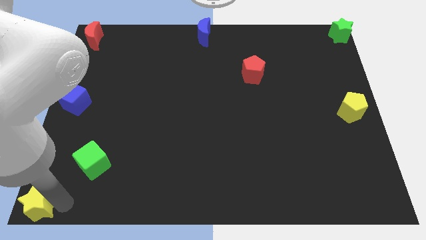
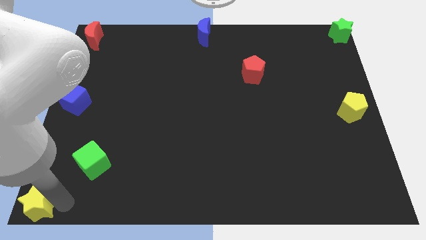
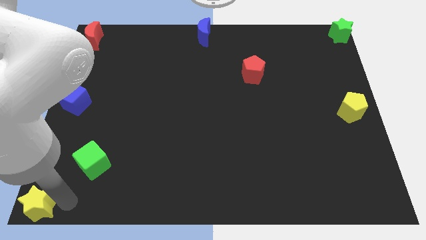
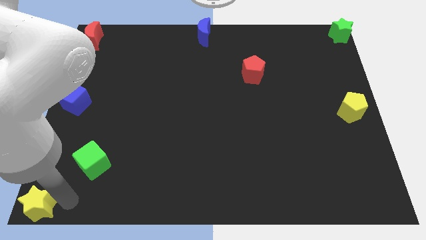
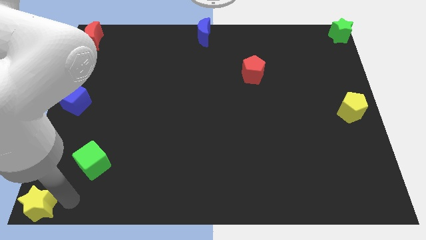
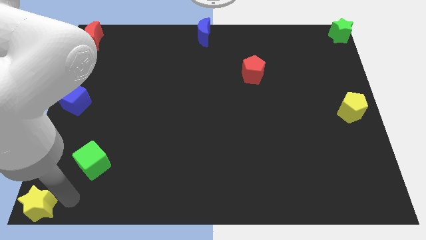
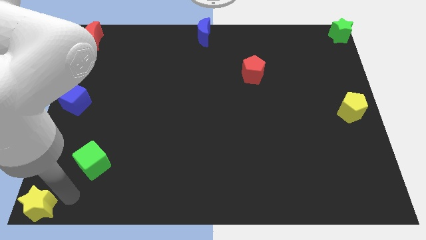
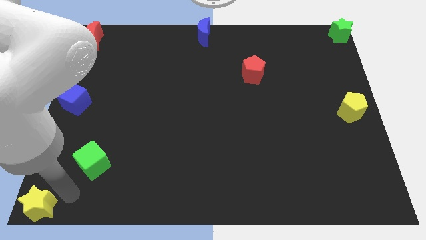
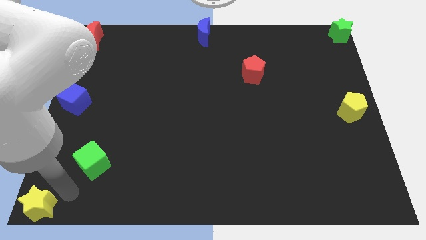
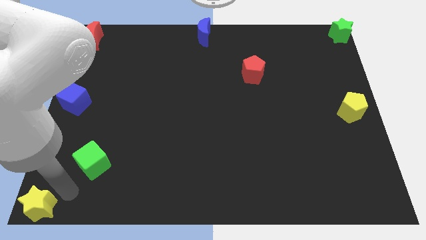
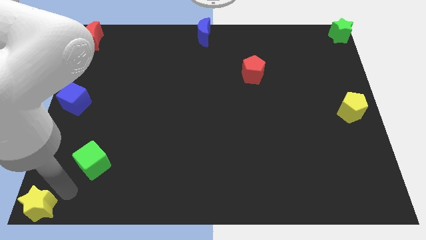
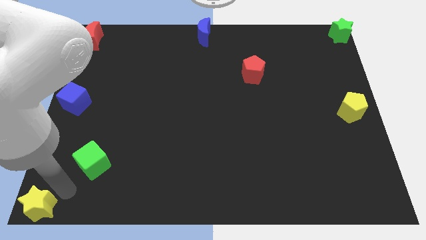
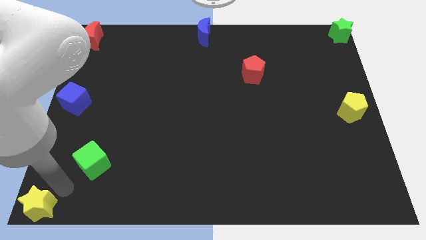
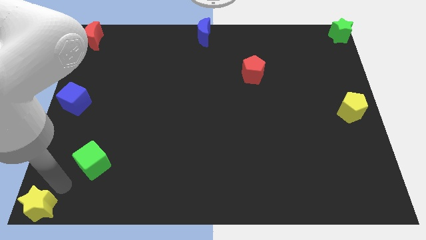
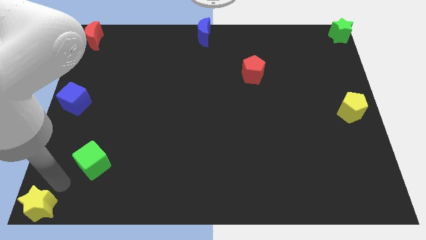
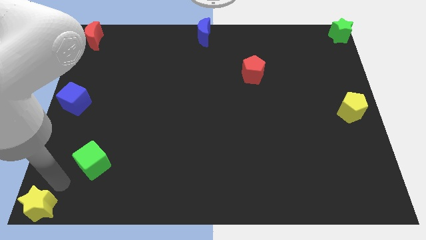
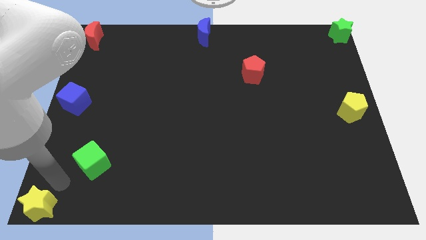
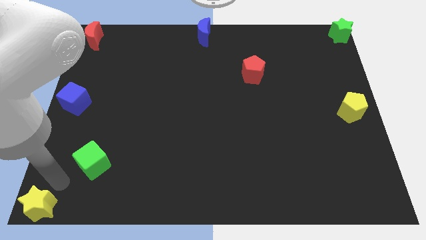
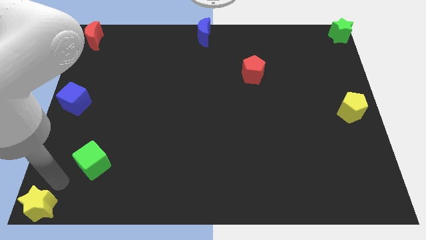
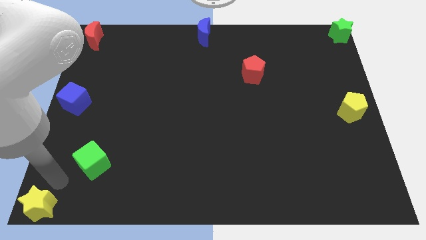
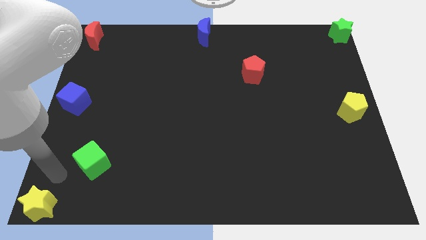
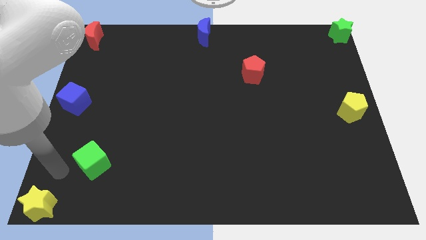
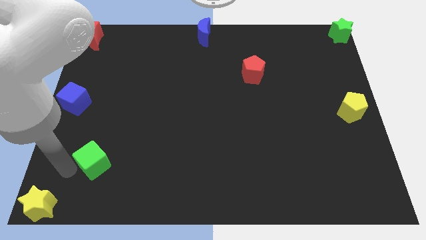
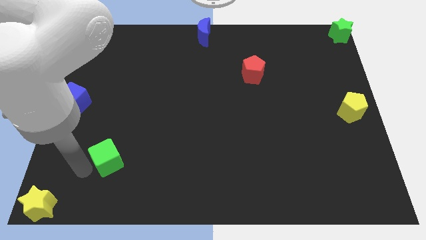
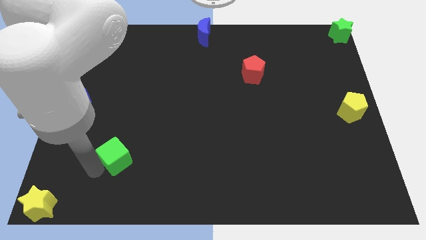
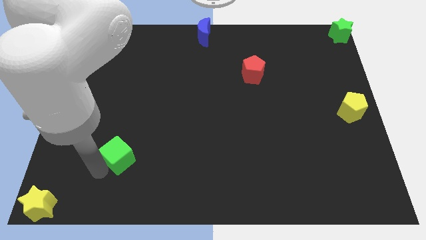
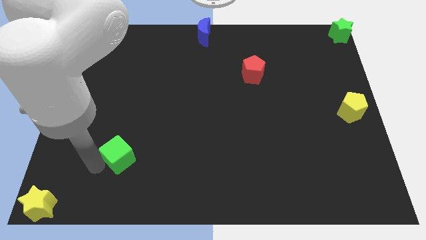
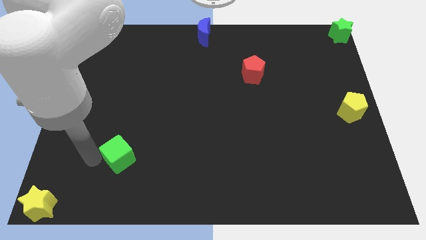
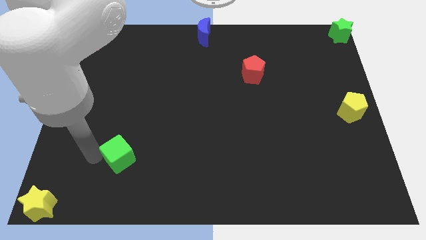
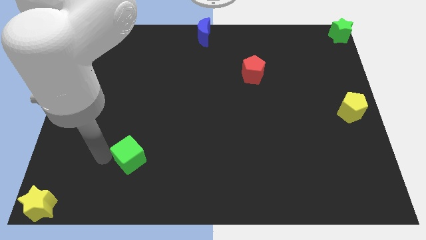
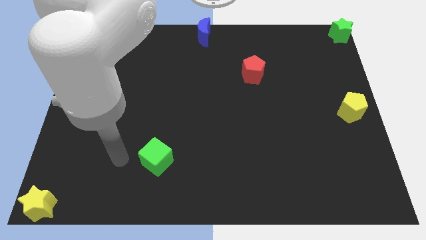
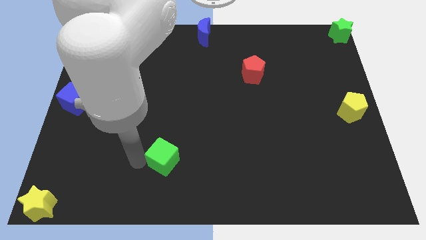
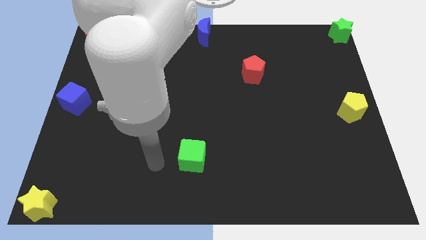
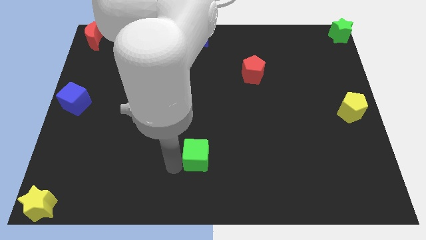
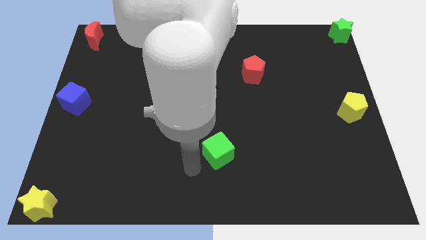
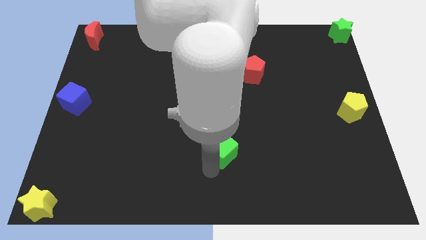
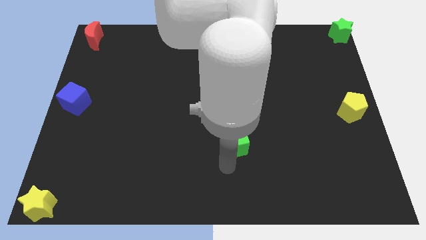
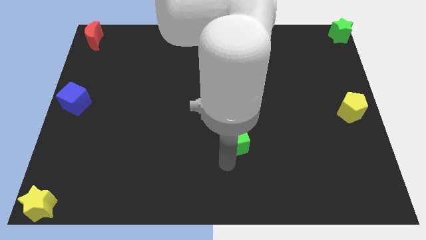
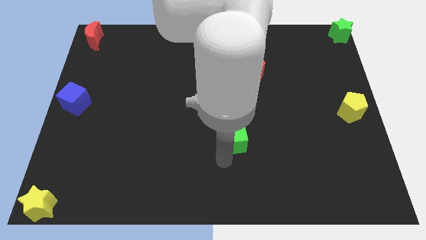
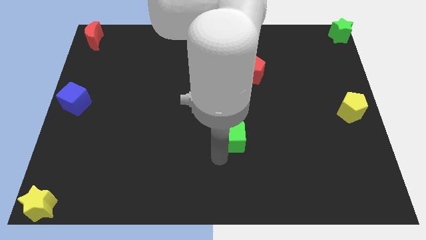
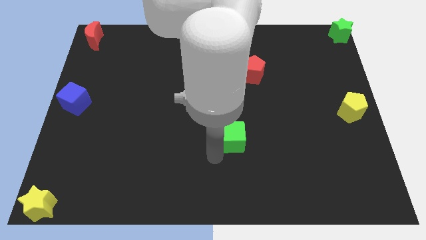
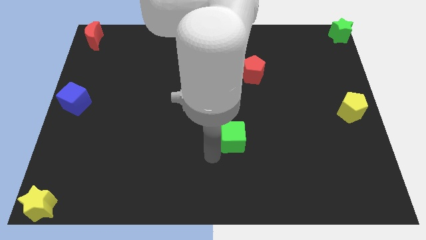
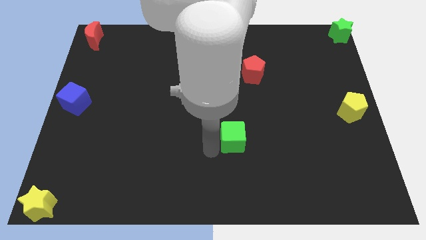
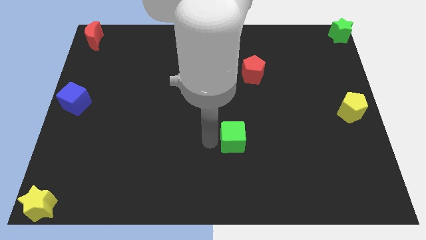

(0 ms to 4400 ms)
push the green cube to the right side

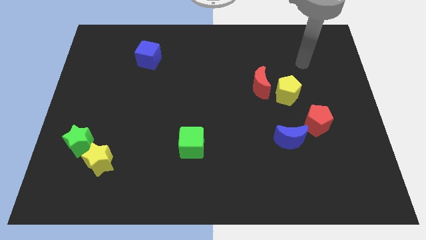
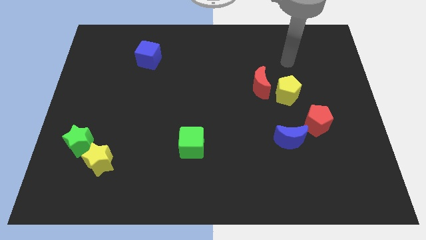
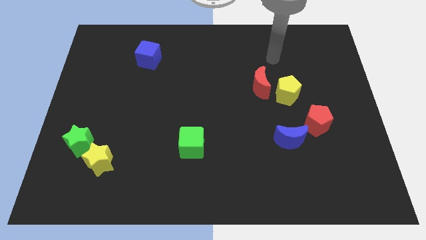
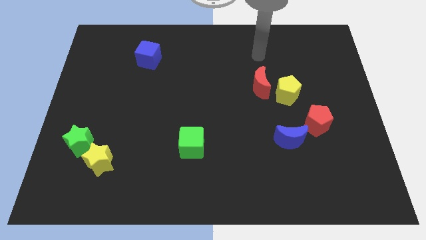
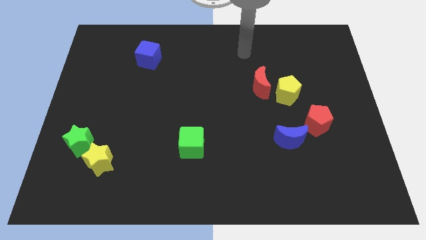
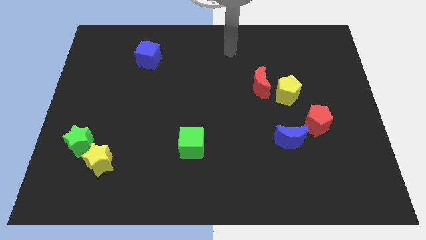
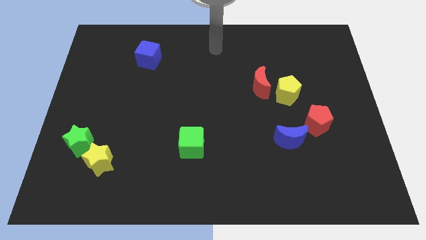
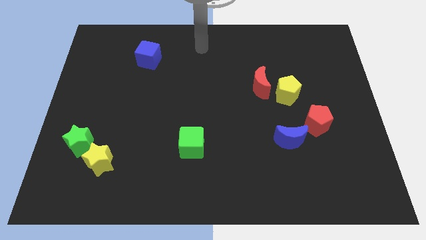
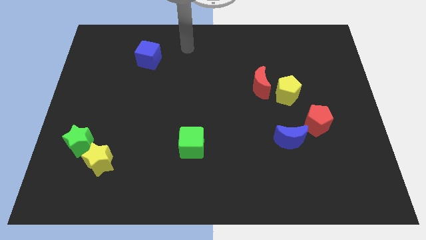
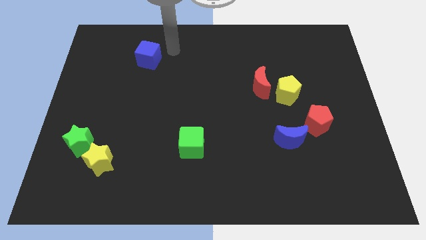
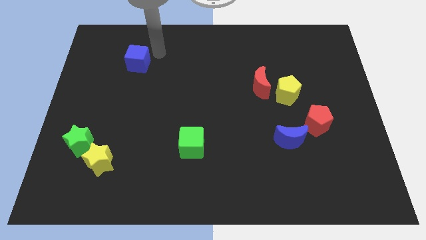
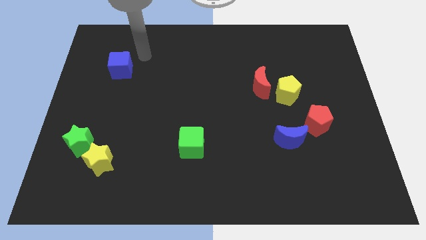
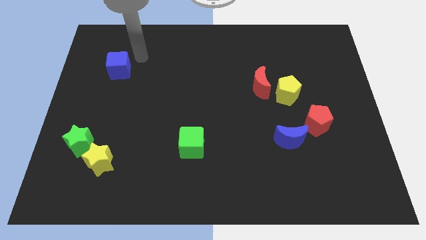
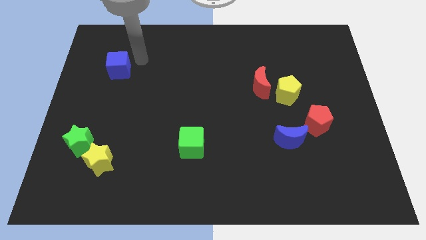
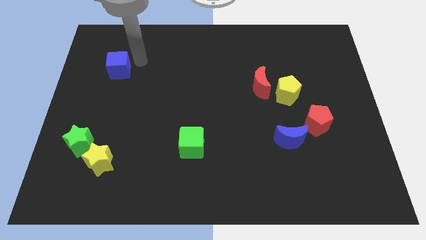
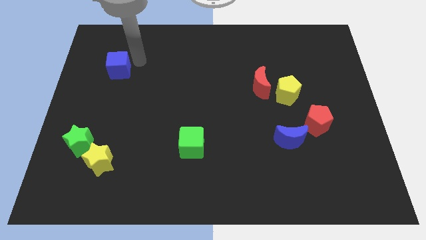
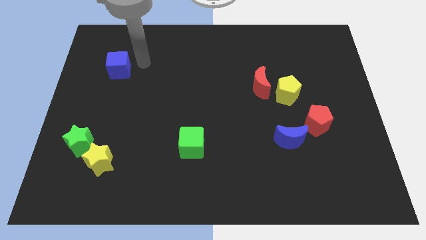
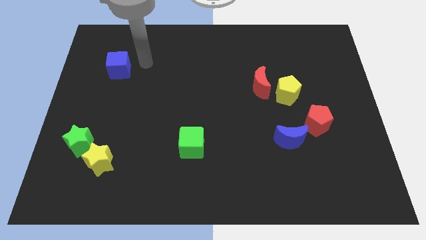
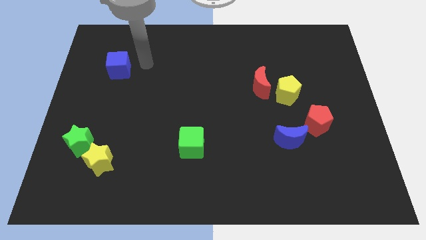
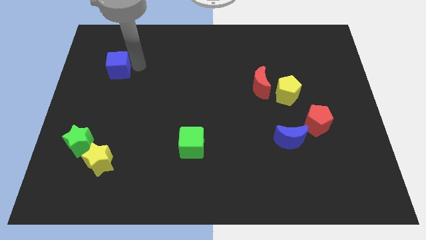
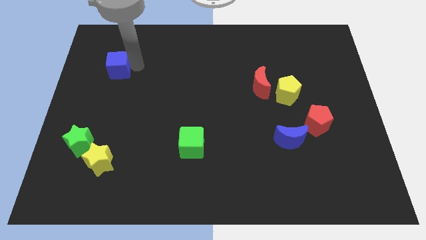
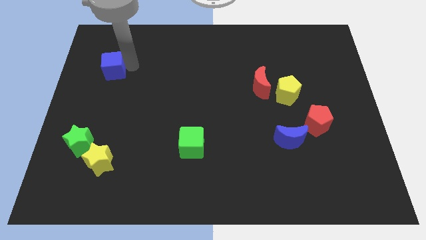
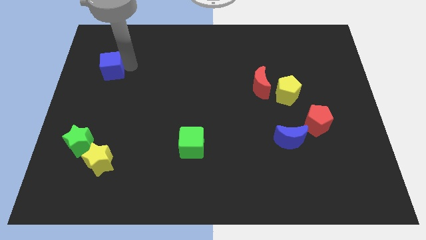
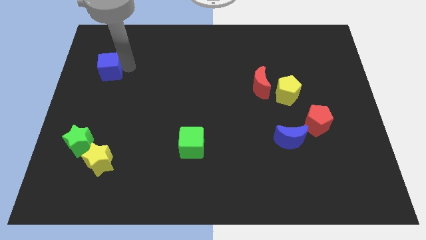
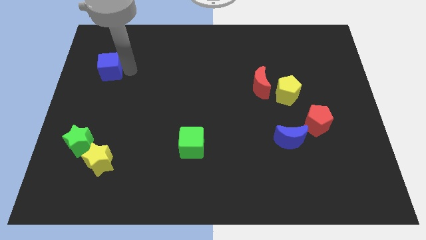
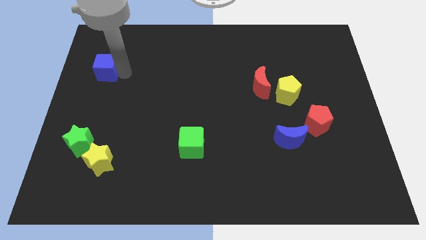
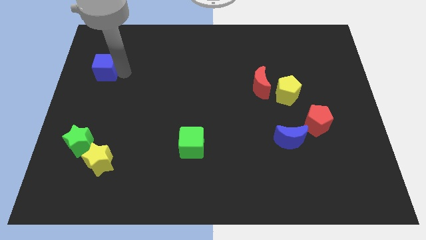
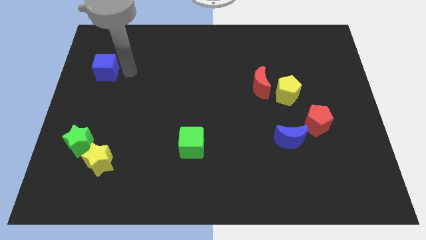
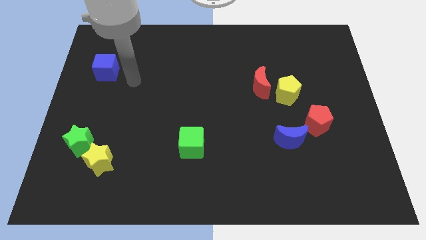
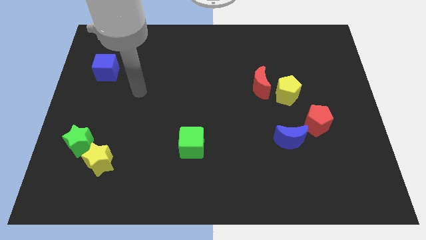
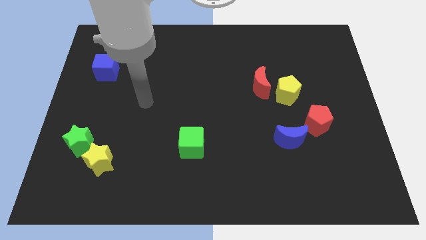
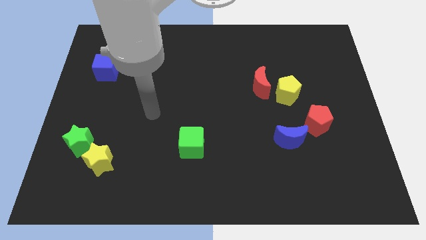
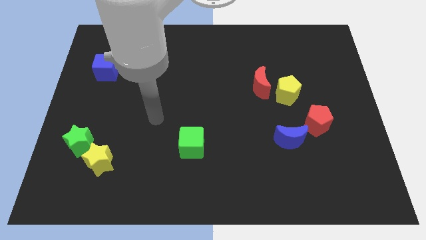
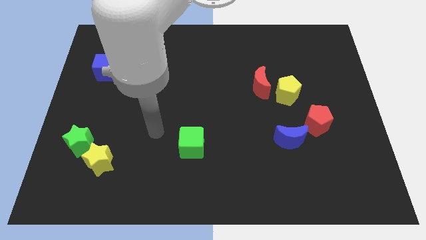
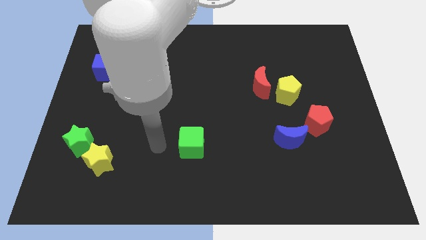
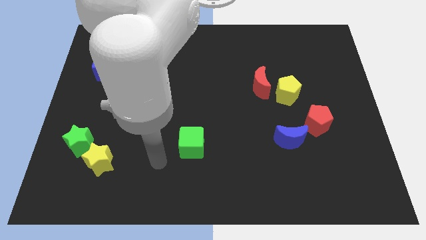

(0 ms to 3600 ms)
place the blue cube above the green star

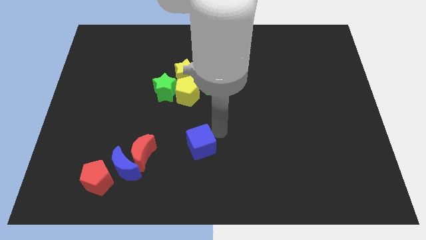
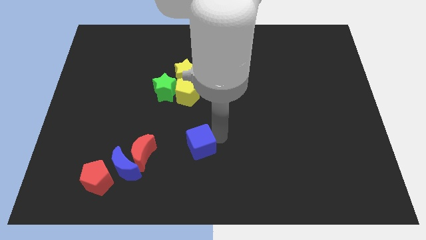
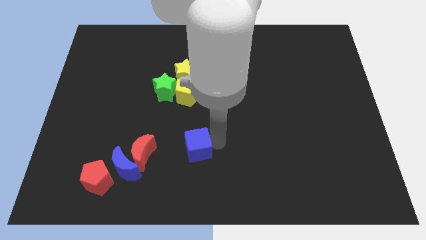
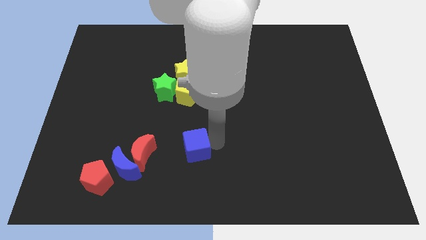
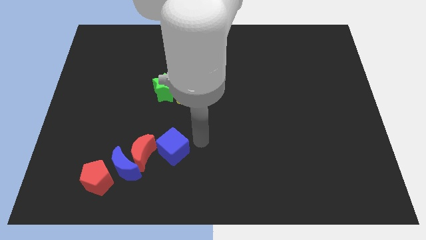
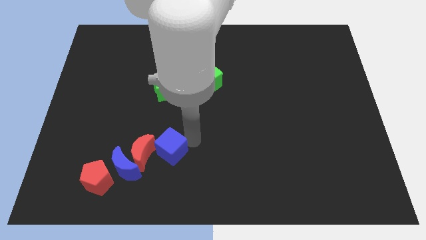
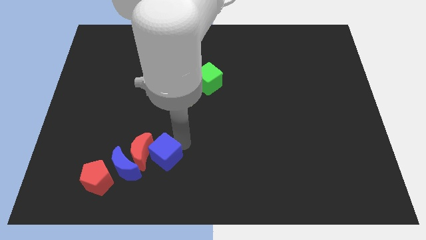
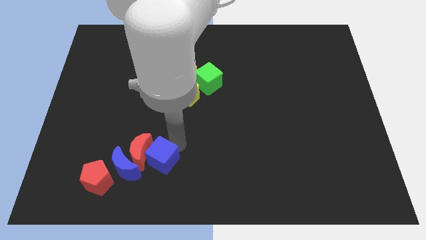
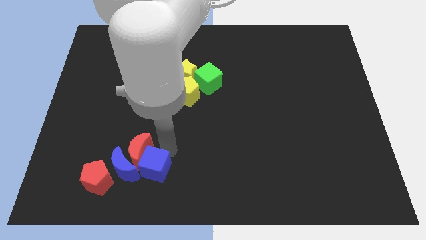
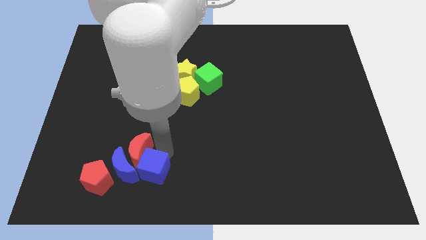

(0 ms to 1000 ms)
push the blue cube into the red moon
